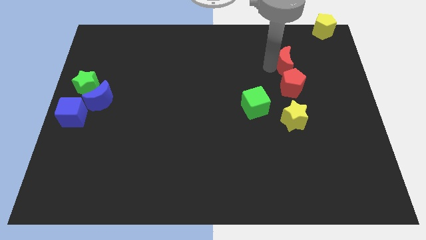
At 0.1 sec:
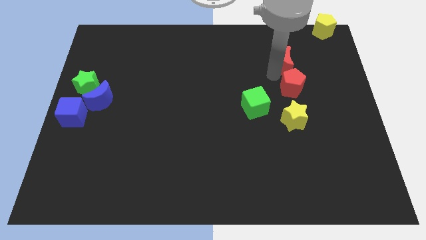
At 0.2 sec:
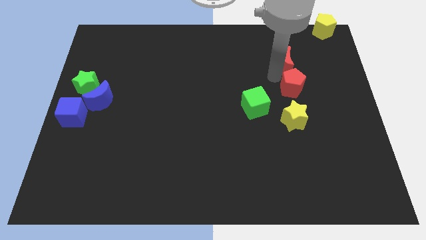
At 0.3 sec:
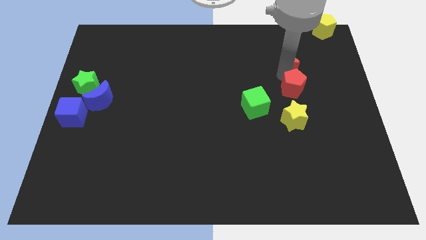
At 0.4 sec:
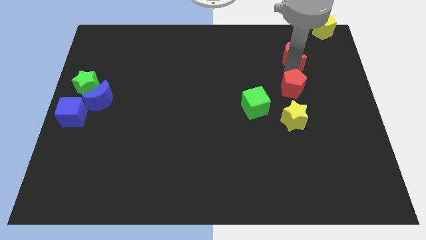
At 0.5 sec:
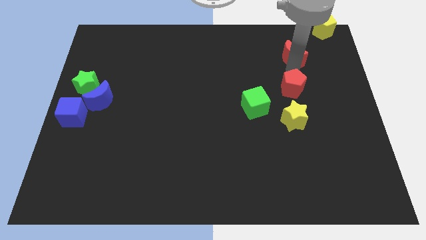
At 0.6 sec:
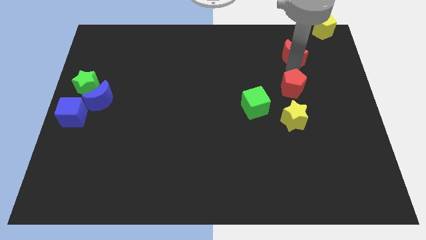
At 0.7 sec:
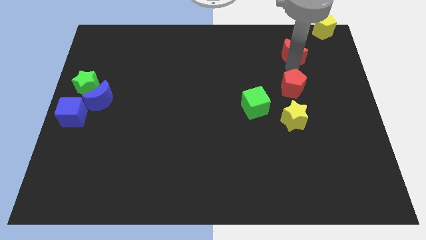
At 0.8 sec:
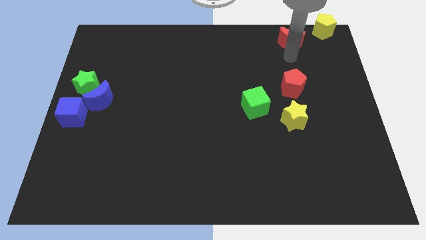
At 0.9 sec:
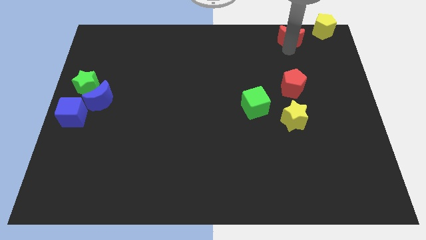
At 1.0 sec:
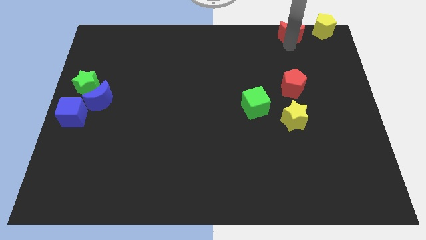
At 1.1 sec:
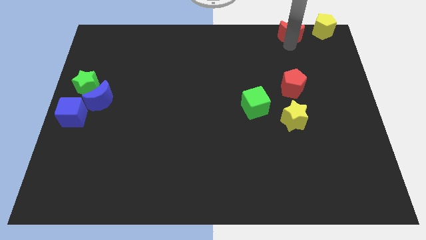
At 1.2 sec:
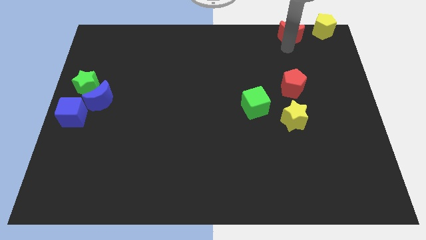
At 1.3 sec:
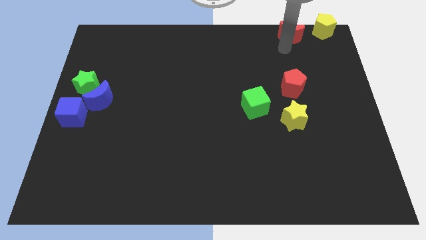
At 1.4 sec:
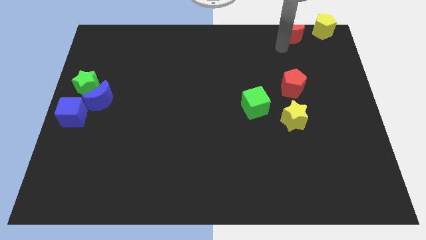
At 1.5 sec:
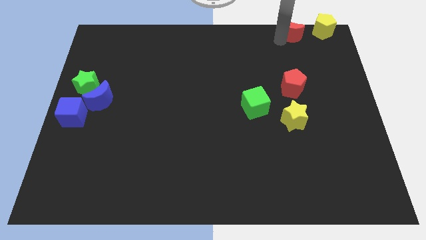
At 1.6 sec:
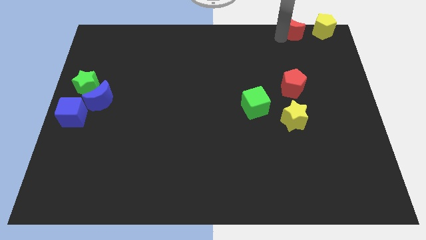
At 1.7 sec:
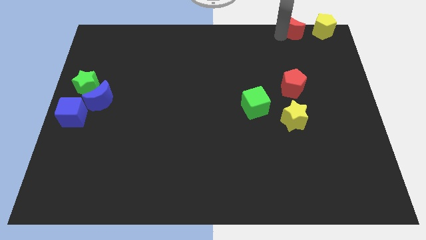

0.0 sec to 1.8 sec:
place the red crescent left to the yellow pentagon

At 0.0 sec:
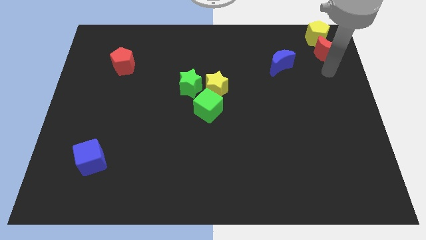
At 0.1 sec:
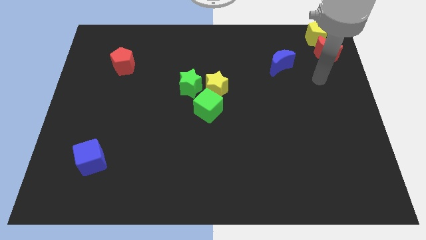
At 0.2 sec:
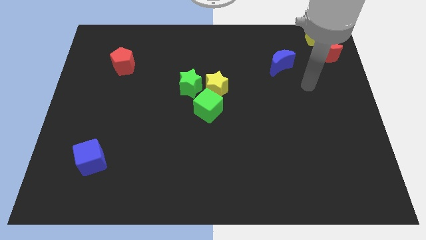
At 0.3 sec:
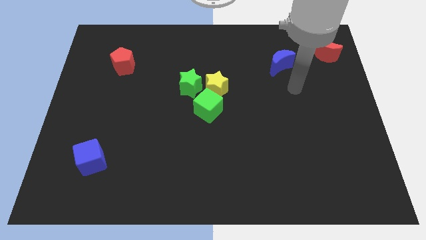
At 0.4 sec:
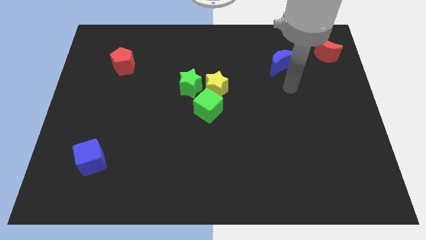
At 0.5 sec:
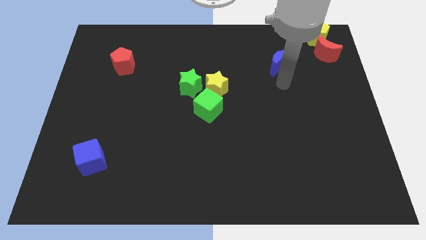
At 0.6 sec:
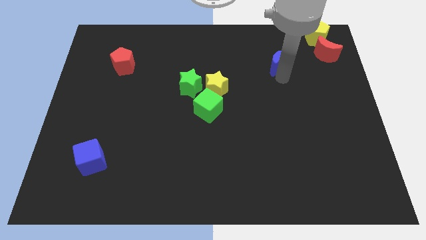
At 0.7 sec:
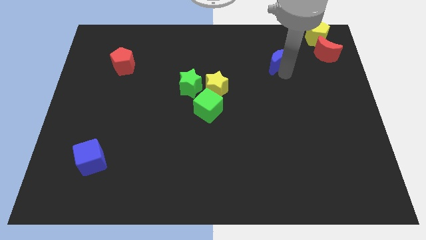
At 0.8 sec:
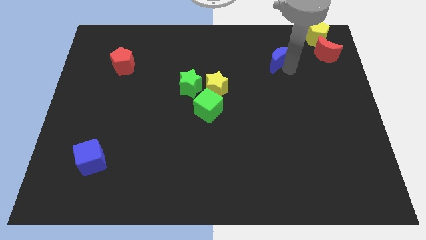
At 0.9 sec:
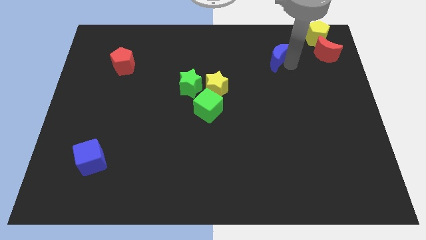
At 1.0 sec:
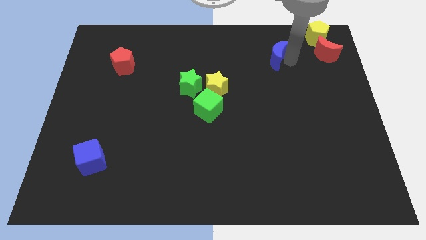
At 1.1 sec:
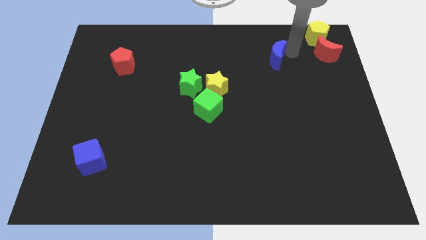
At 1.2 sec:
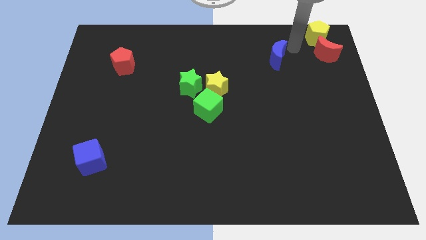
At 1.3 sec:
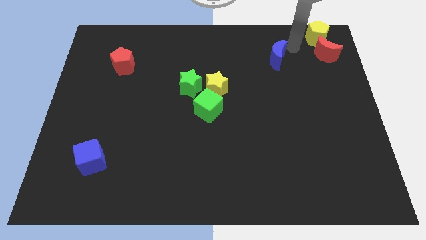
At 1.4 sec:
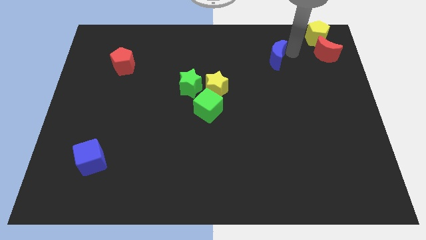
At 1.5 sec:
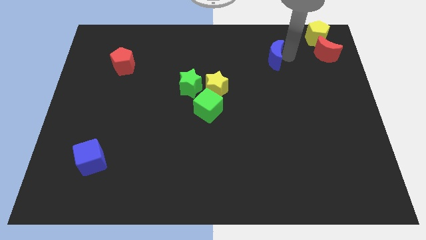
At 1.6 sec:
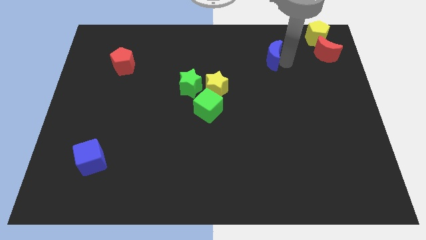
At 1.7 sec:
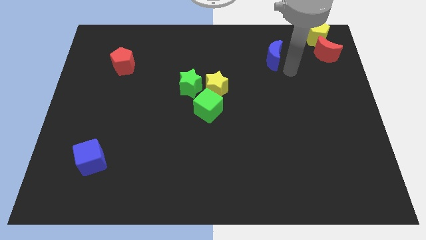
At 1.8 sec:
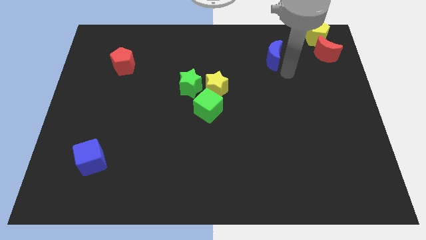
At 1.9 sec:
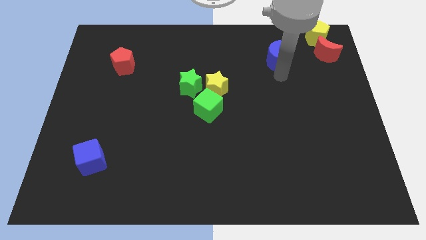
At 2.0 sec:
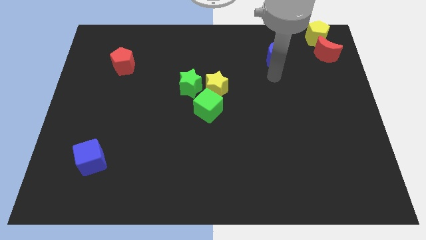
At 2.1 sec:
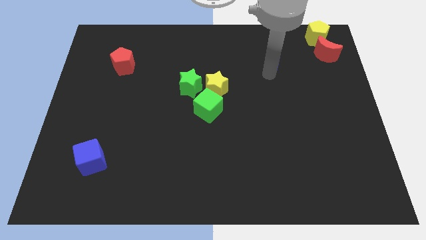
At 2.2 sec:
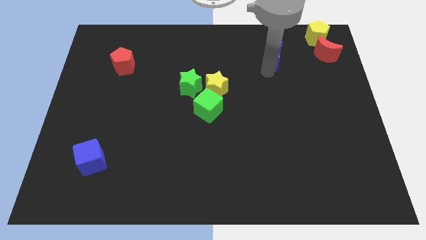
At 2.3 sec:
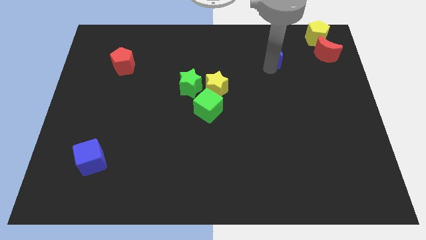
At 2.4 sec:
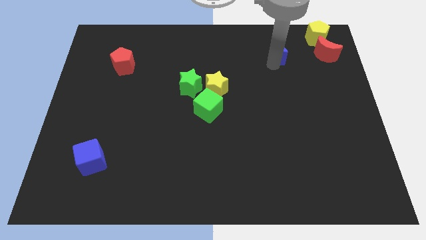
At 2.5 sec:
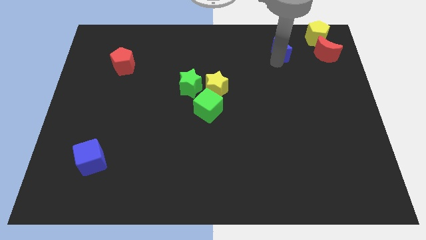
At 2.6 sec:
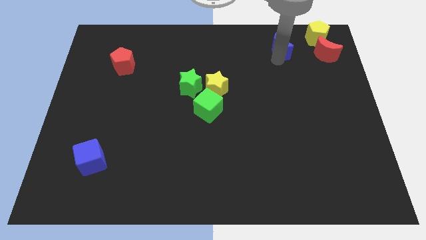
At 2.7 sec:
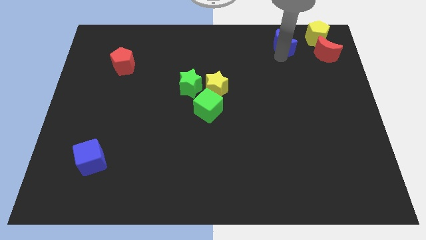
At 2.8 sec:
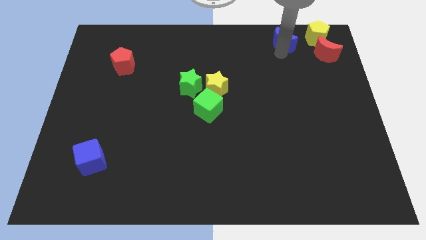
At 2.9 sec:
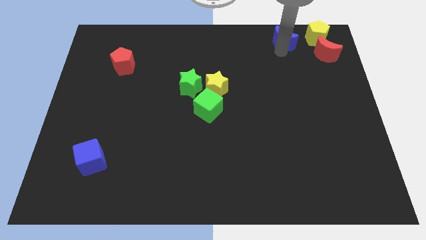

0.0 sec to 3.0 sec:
move the blue moon left to the yellow pentagon

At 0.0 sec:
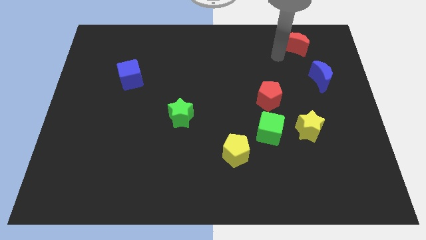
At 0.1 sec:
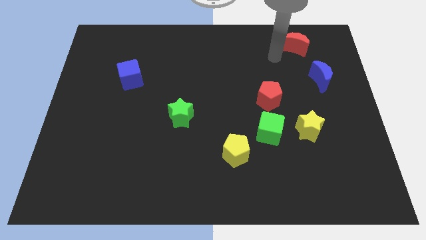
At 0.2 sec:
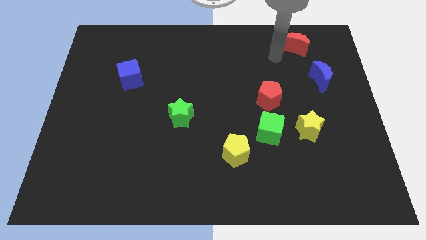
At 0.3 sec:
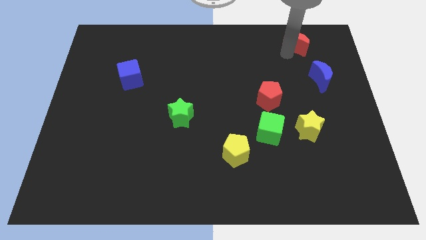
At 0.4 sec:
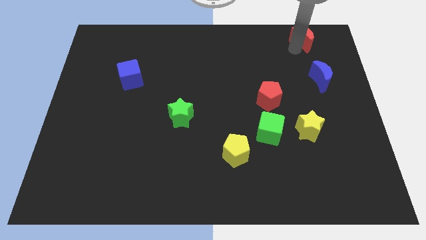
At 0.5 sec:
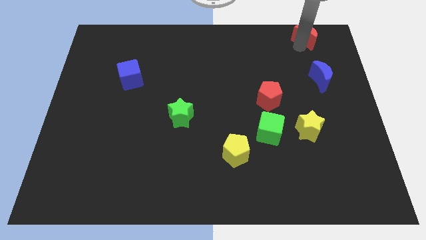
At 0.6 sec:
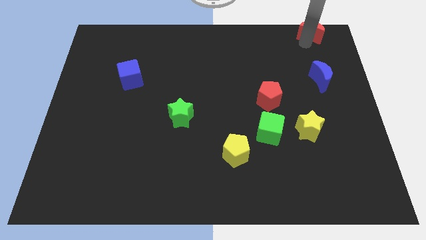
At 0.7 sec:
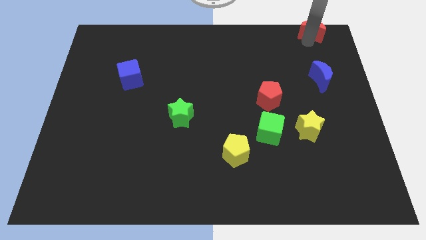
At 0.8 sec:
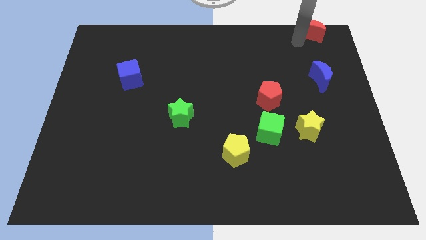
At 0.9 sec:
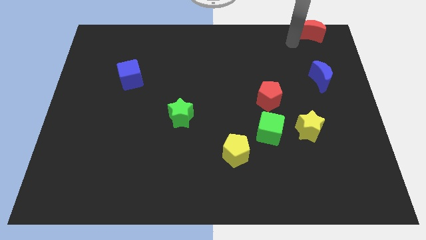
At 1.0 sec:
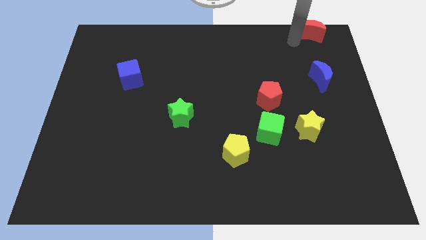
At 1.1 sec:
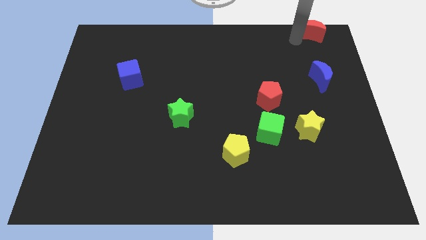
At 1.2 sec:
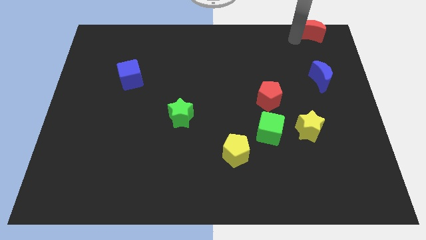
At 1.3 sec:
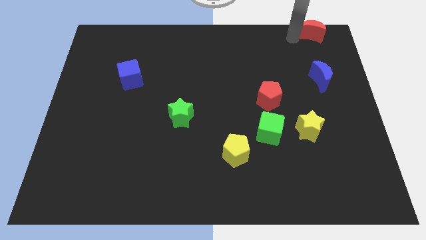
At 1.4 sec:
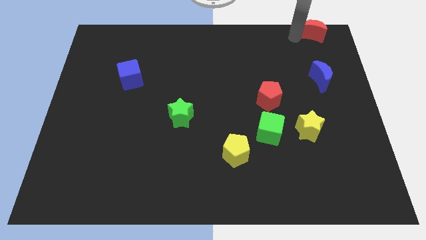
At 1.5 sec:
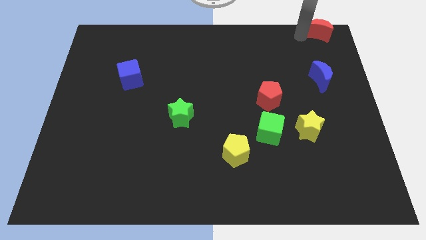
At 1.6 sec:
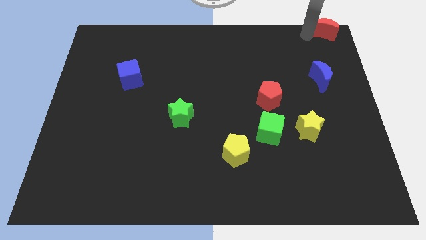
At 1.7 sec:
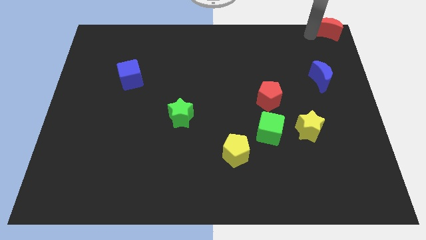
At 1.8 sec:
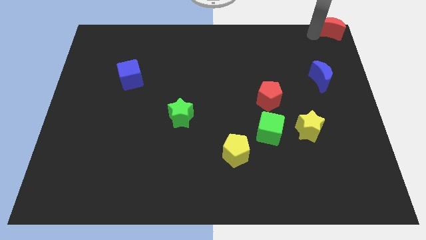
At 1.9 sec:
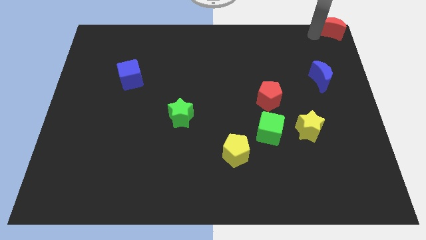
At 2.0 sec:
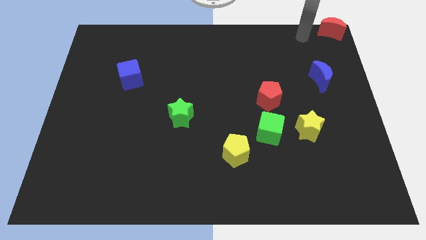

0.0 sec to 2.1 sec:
push red moon to the top right

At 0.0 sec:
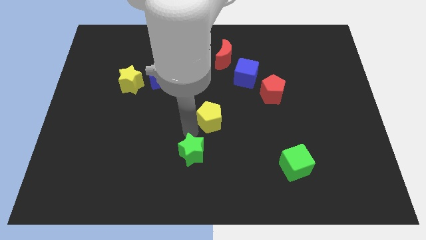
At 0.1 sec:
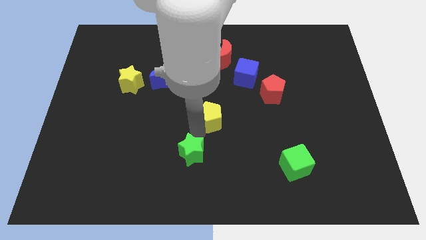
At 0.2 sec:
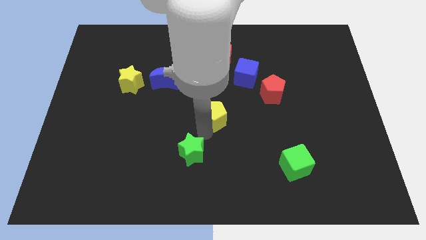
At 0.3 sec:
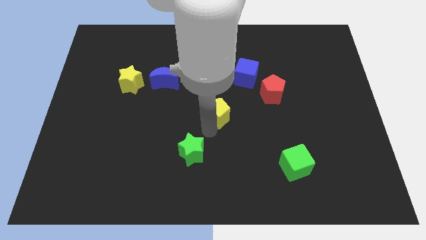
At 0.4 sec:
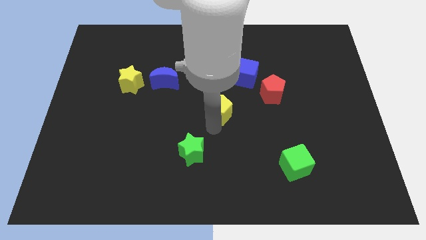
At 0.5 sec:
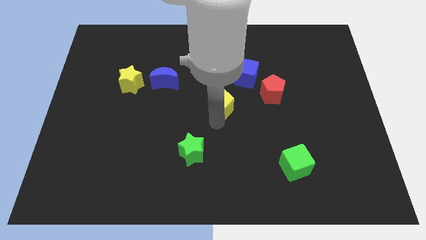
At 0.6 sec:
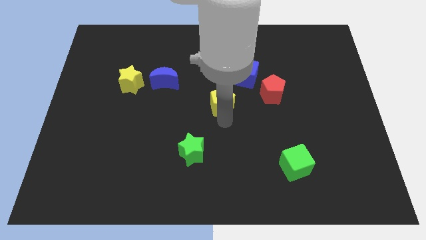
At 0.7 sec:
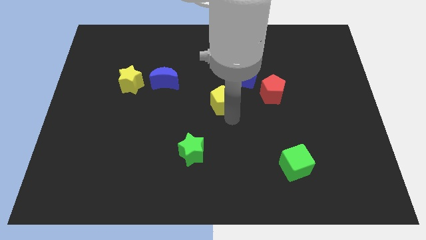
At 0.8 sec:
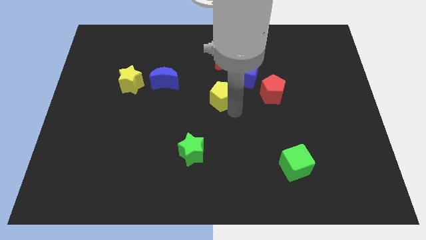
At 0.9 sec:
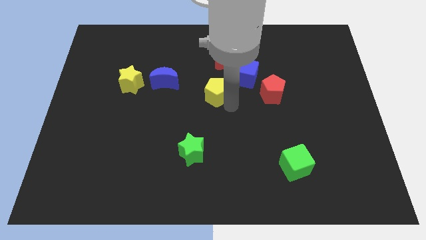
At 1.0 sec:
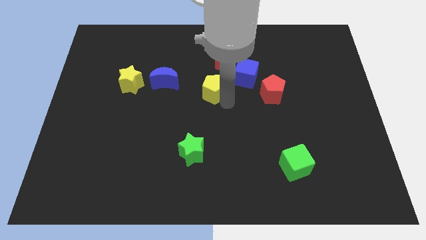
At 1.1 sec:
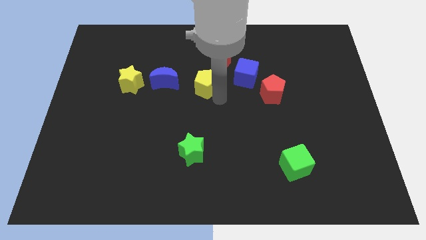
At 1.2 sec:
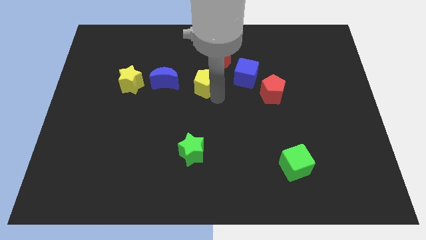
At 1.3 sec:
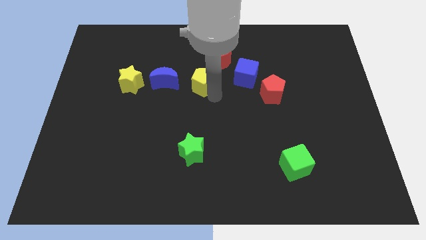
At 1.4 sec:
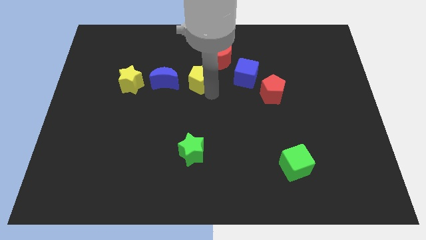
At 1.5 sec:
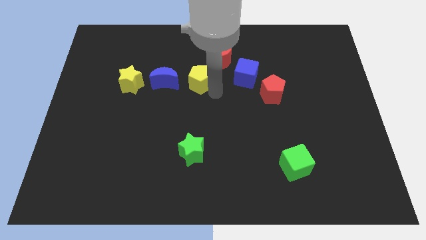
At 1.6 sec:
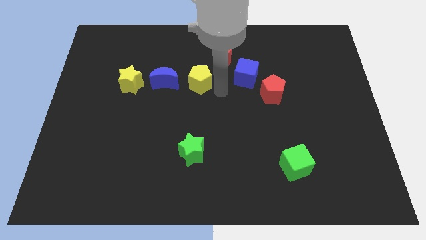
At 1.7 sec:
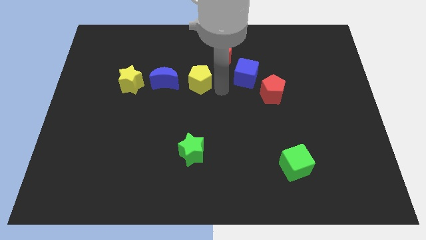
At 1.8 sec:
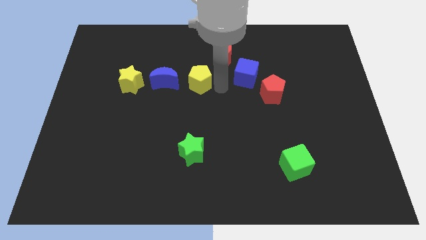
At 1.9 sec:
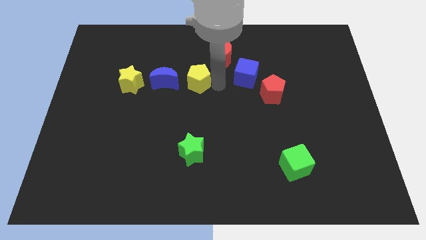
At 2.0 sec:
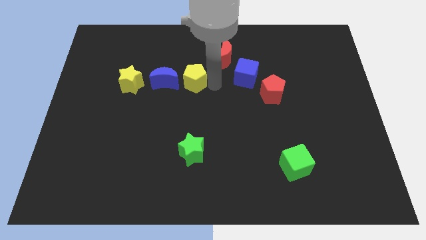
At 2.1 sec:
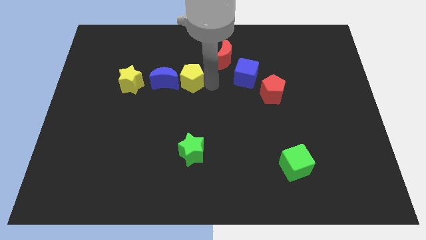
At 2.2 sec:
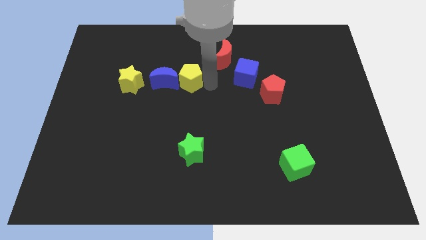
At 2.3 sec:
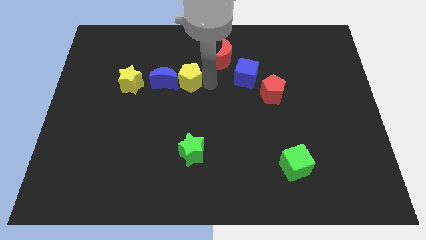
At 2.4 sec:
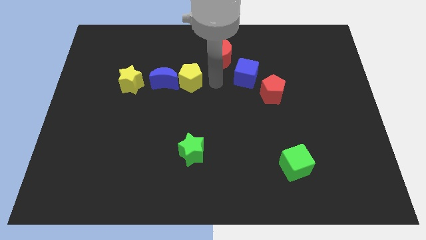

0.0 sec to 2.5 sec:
push the yellow pentagon towards the right of the blue crescent
